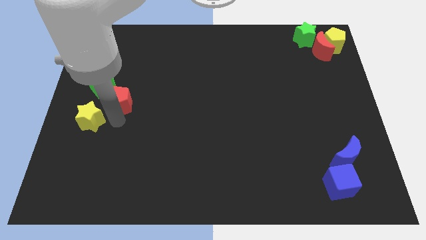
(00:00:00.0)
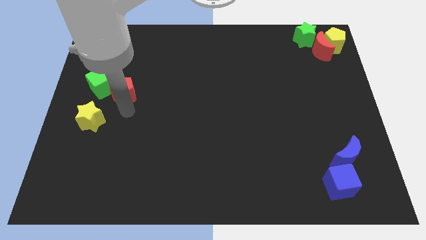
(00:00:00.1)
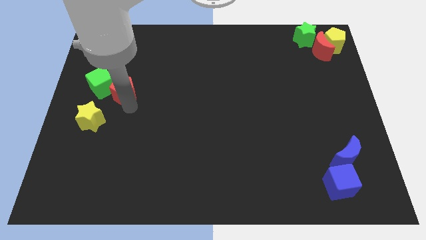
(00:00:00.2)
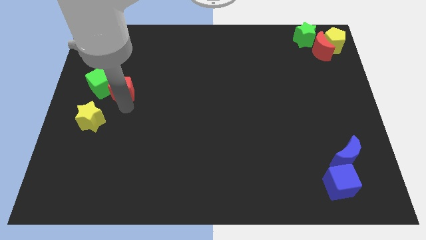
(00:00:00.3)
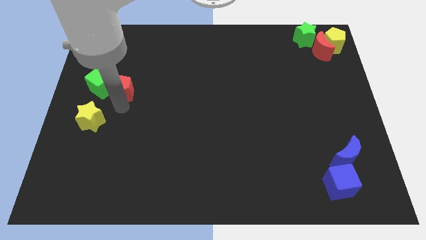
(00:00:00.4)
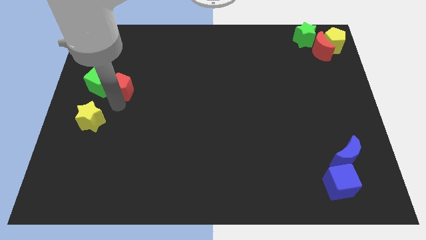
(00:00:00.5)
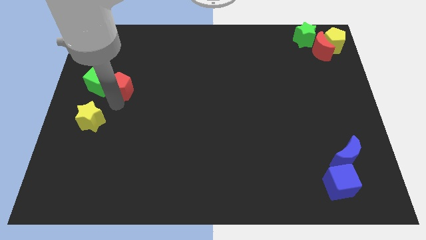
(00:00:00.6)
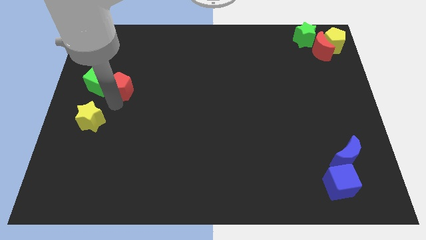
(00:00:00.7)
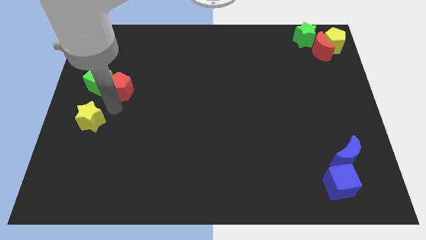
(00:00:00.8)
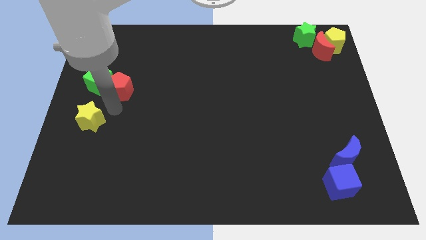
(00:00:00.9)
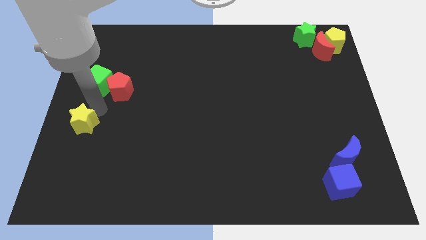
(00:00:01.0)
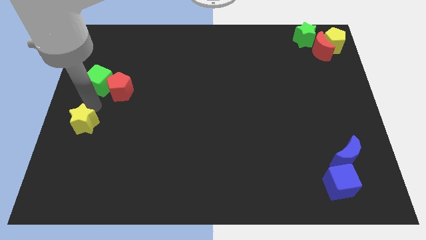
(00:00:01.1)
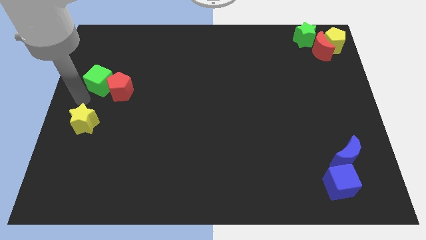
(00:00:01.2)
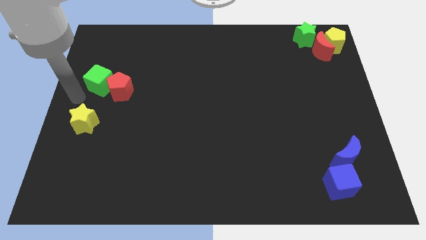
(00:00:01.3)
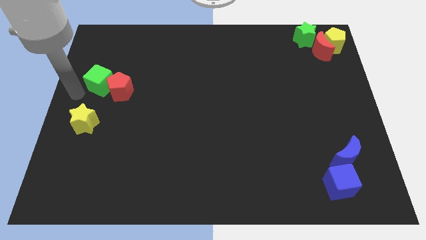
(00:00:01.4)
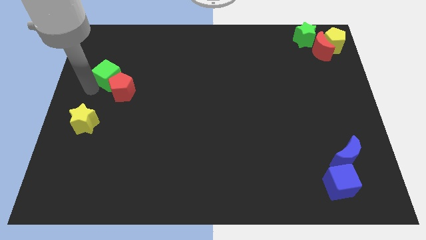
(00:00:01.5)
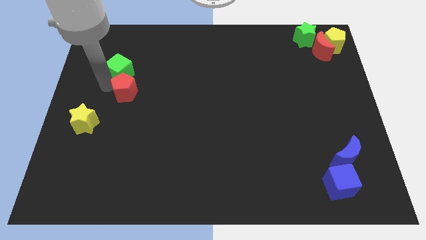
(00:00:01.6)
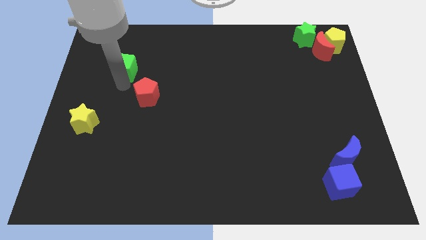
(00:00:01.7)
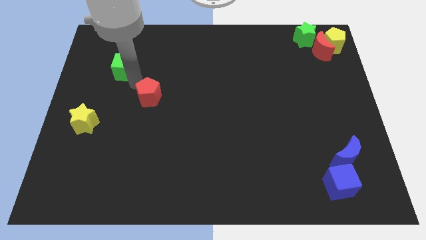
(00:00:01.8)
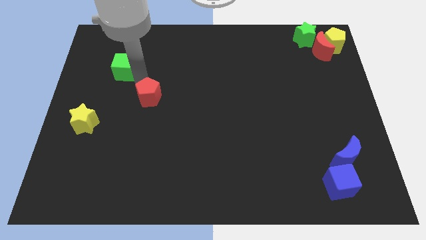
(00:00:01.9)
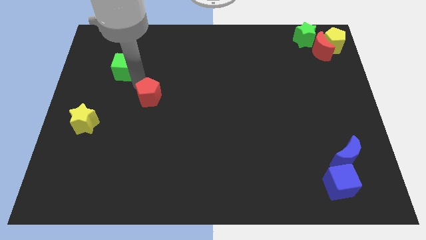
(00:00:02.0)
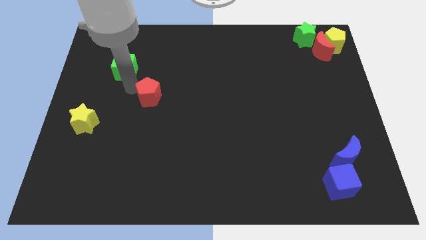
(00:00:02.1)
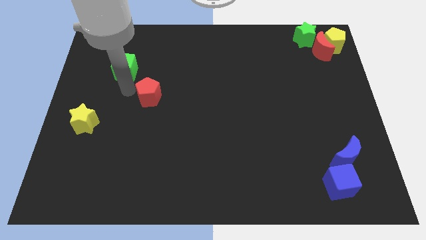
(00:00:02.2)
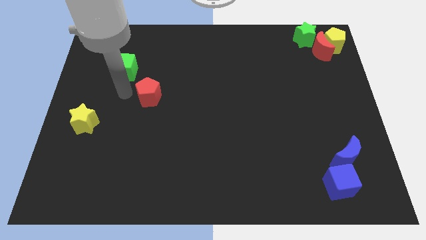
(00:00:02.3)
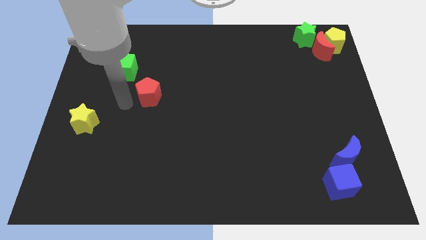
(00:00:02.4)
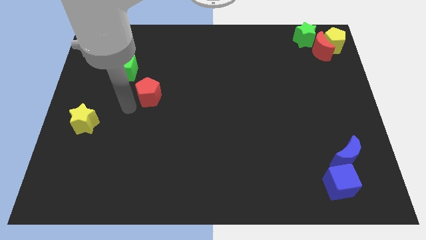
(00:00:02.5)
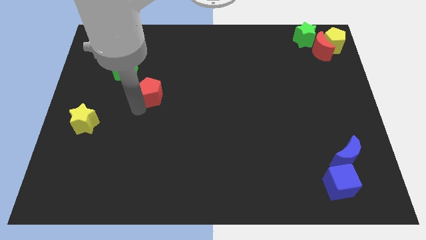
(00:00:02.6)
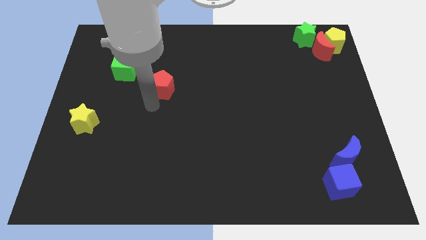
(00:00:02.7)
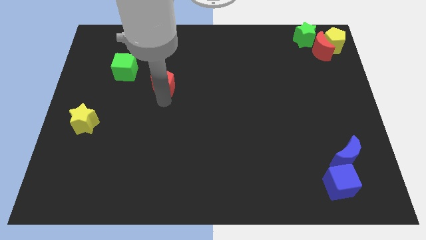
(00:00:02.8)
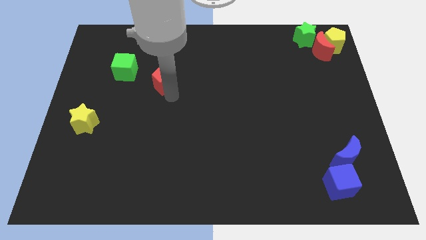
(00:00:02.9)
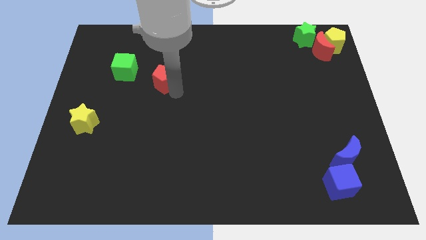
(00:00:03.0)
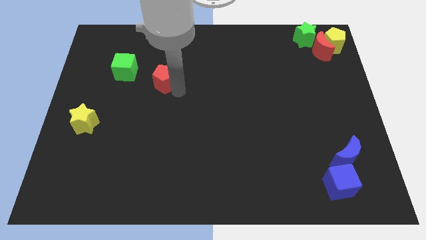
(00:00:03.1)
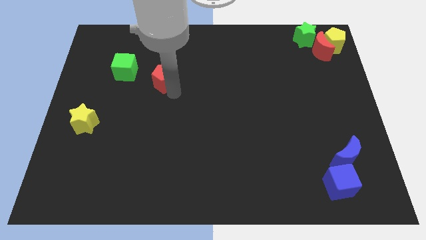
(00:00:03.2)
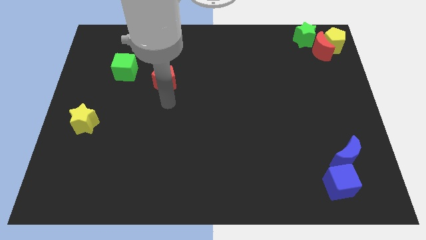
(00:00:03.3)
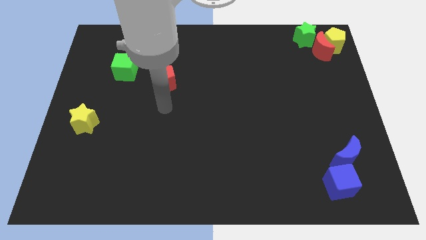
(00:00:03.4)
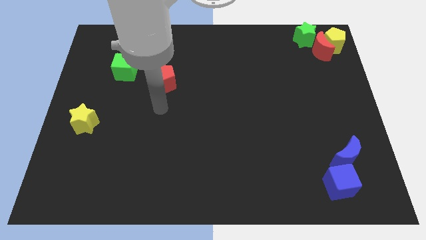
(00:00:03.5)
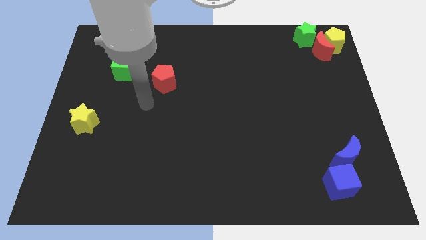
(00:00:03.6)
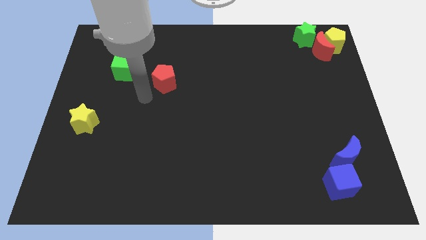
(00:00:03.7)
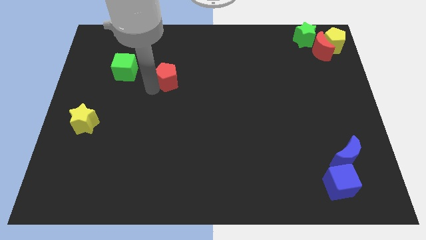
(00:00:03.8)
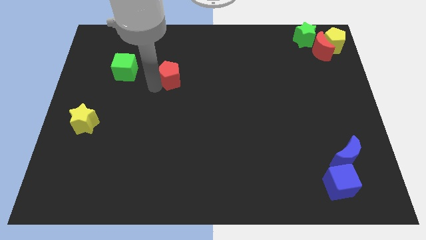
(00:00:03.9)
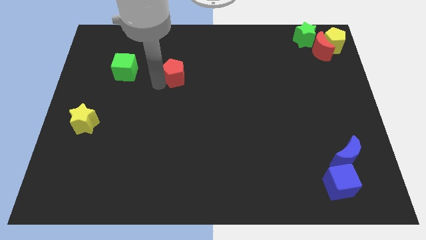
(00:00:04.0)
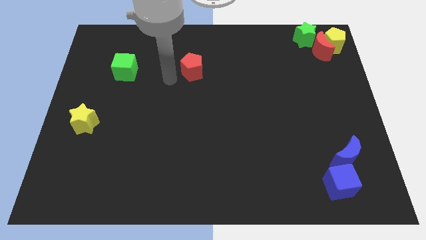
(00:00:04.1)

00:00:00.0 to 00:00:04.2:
slide the red pentagon to the right side of the green cube

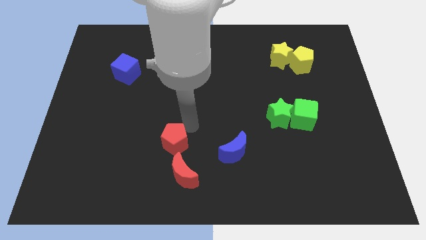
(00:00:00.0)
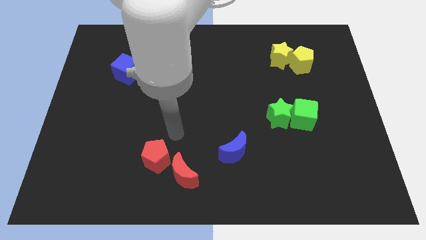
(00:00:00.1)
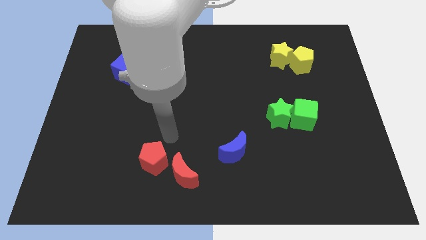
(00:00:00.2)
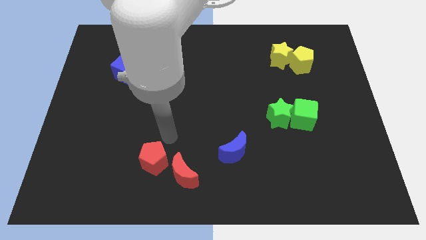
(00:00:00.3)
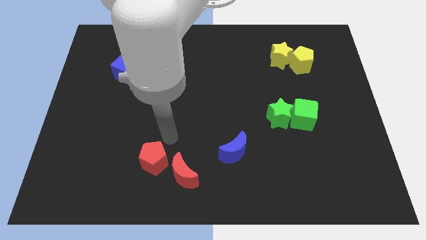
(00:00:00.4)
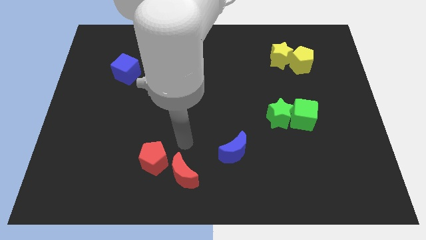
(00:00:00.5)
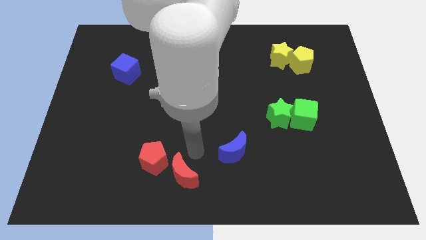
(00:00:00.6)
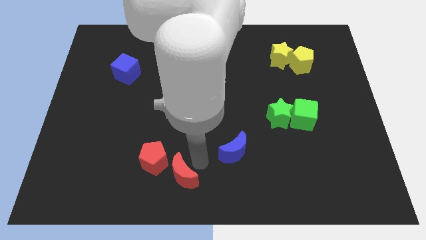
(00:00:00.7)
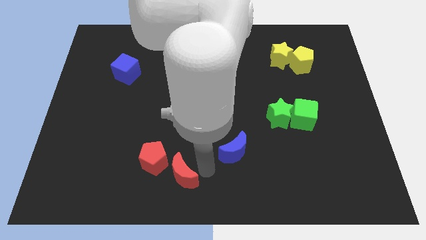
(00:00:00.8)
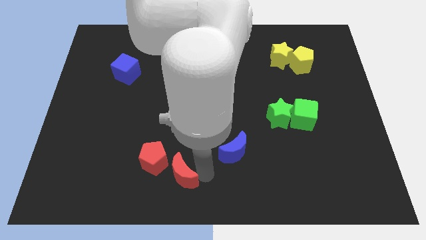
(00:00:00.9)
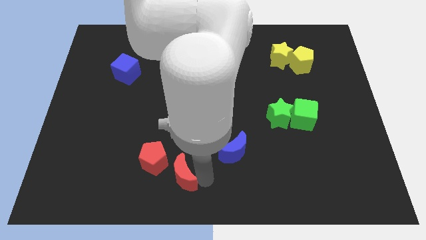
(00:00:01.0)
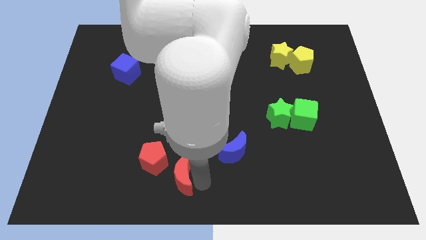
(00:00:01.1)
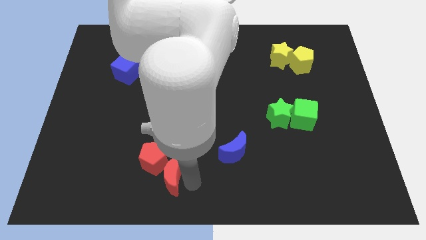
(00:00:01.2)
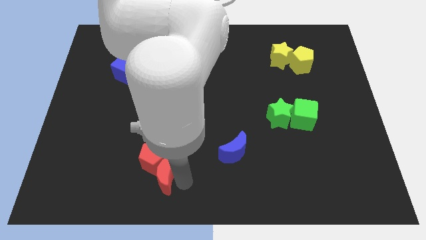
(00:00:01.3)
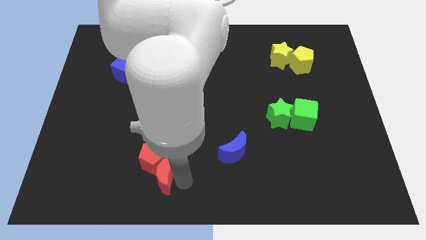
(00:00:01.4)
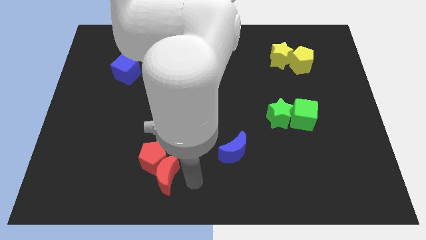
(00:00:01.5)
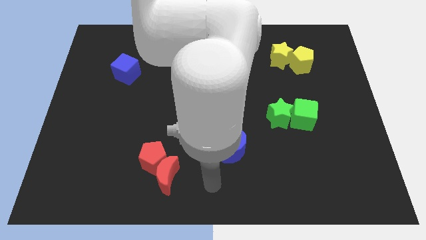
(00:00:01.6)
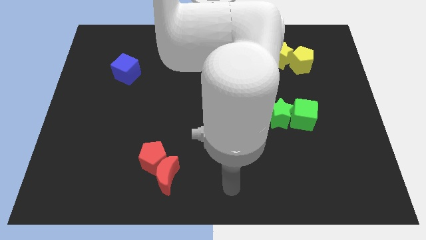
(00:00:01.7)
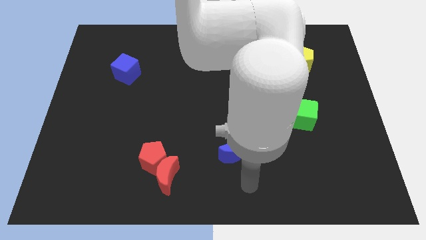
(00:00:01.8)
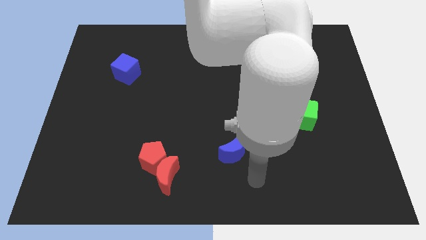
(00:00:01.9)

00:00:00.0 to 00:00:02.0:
put the red pentagon with red moon

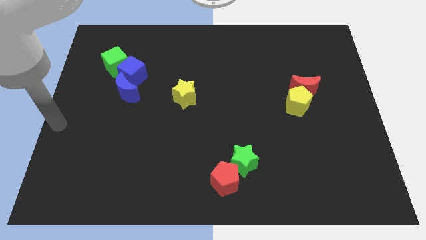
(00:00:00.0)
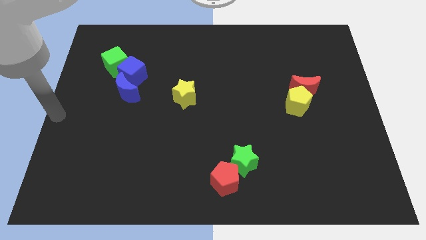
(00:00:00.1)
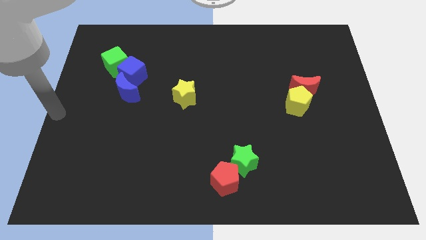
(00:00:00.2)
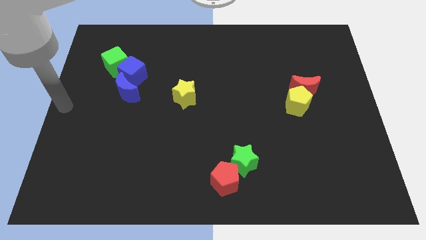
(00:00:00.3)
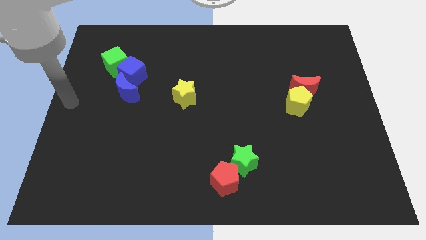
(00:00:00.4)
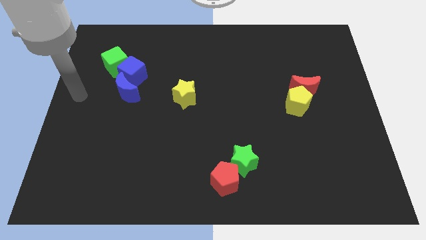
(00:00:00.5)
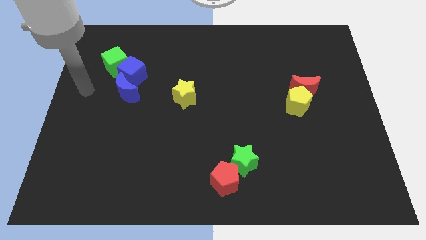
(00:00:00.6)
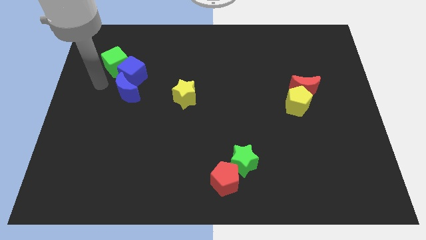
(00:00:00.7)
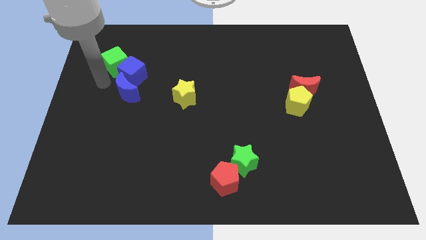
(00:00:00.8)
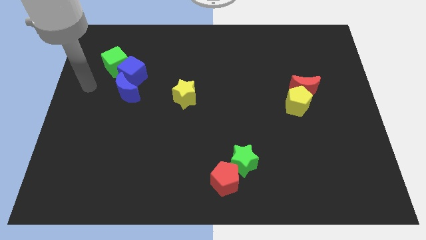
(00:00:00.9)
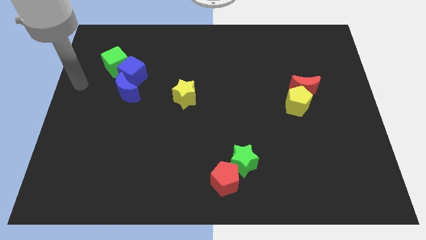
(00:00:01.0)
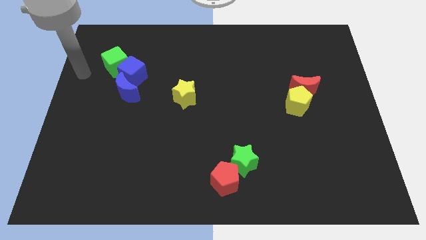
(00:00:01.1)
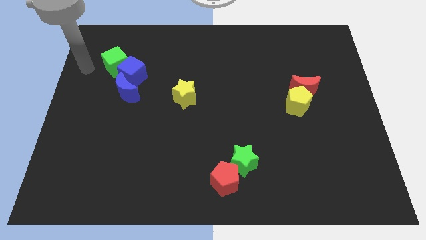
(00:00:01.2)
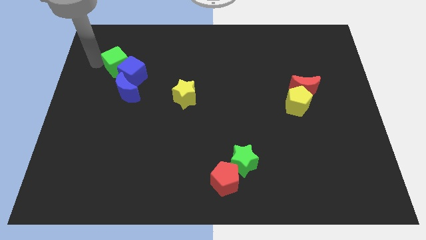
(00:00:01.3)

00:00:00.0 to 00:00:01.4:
place your arm close to the green cube

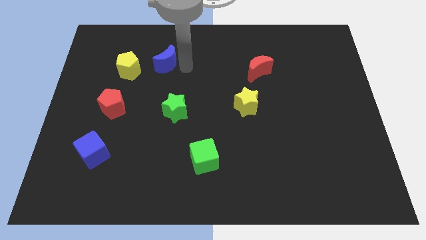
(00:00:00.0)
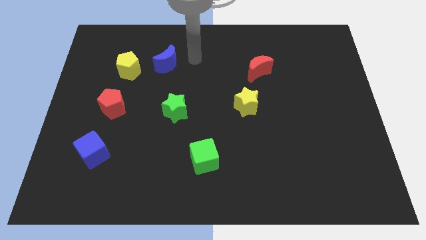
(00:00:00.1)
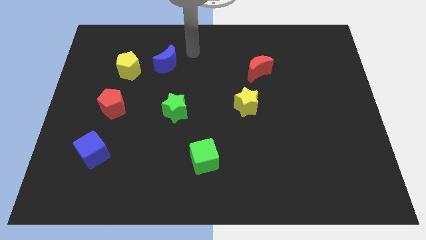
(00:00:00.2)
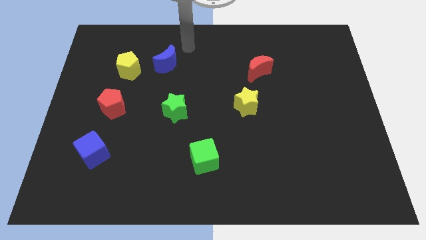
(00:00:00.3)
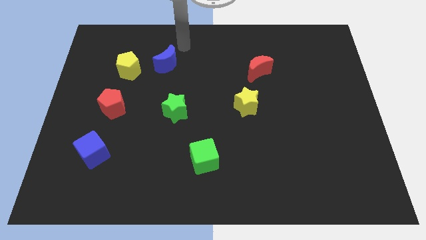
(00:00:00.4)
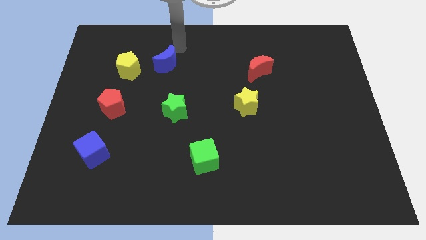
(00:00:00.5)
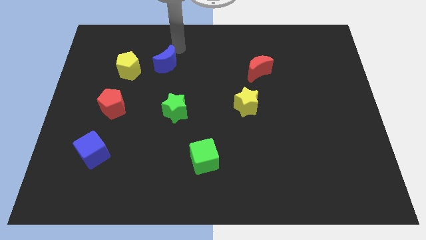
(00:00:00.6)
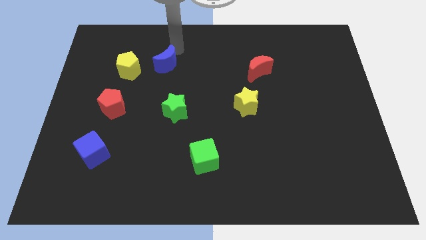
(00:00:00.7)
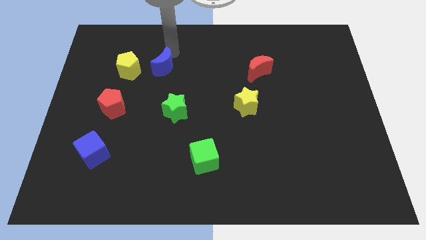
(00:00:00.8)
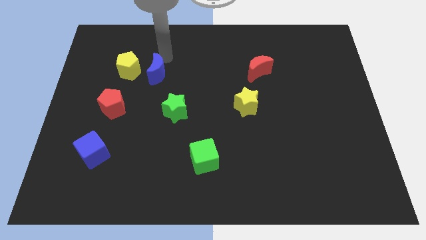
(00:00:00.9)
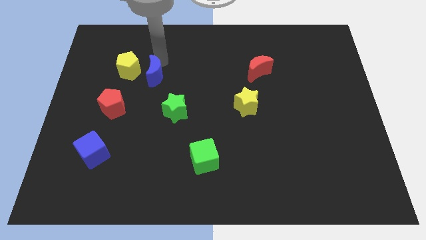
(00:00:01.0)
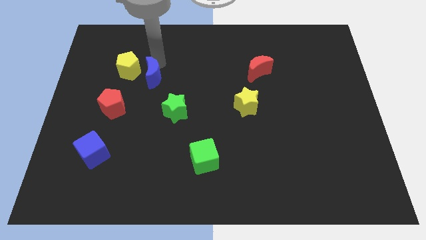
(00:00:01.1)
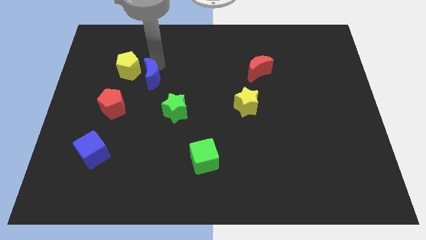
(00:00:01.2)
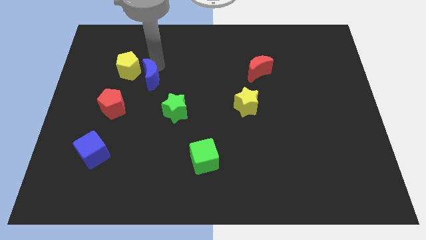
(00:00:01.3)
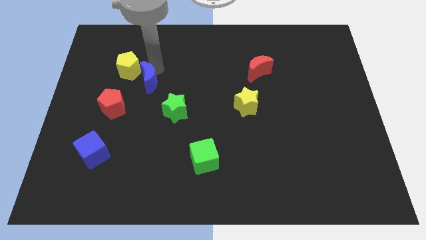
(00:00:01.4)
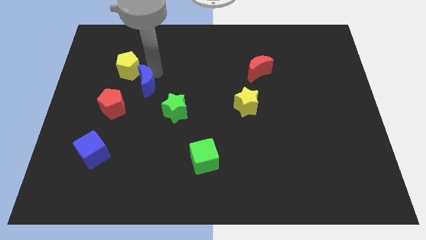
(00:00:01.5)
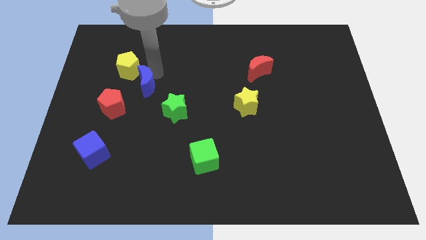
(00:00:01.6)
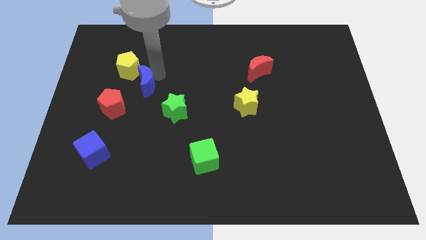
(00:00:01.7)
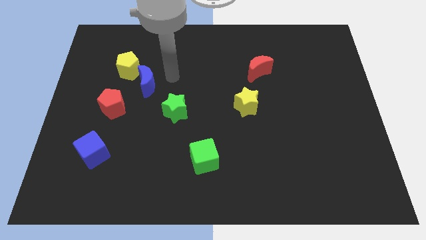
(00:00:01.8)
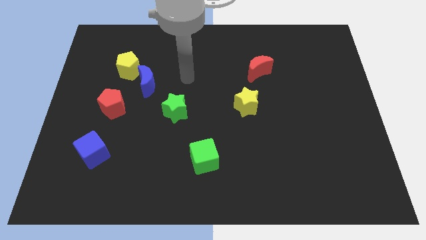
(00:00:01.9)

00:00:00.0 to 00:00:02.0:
push the blue moon downward
